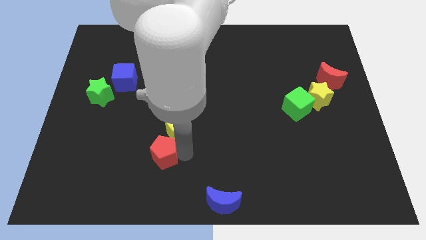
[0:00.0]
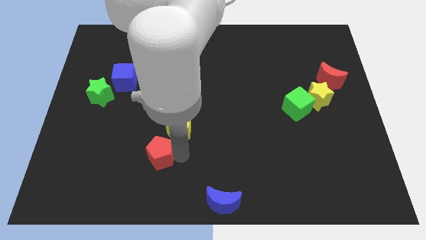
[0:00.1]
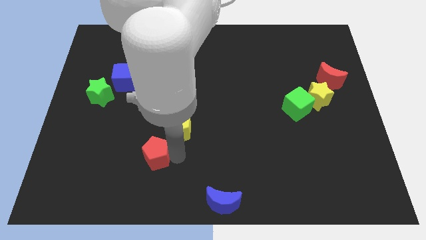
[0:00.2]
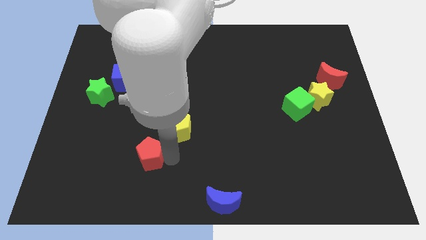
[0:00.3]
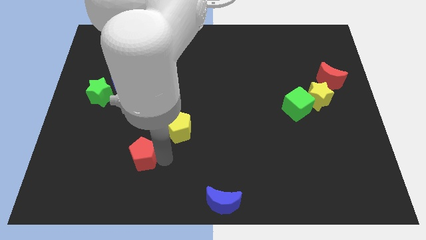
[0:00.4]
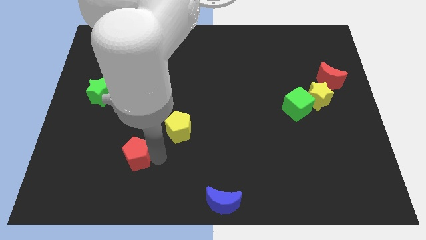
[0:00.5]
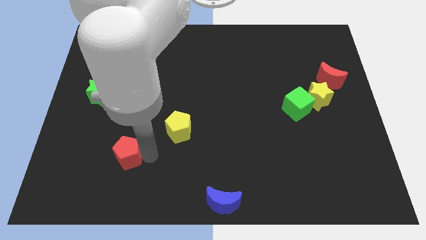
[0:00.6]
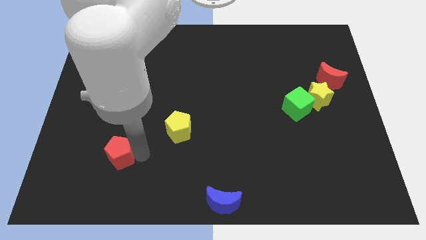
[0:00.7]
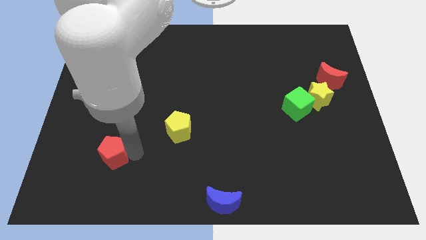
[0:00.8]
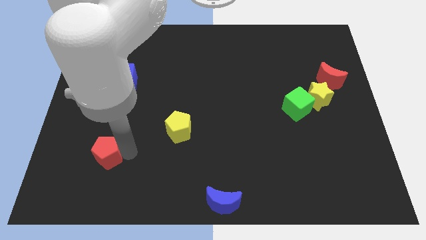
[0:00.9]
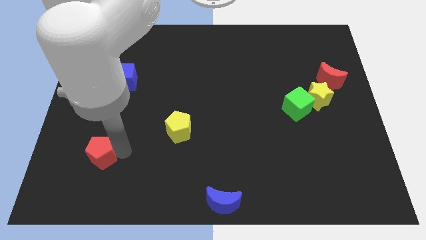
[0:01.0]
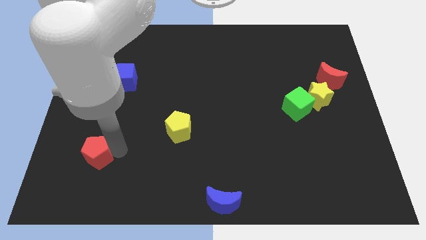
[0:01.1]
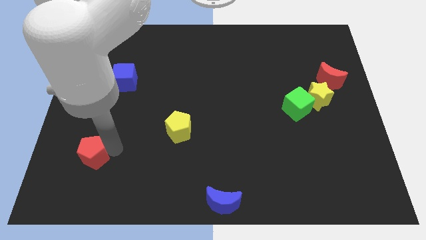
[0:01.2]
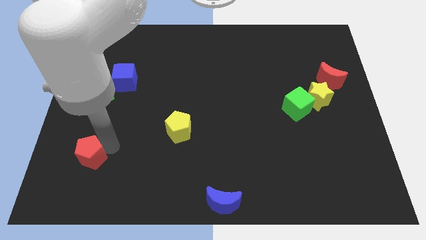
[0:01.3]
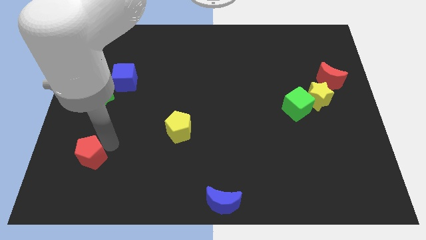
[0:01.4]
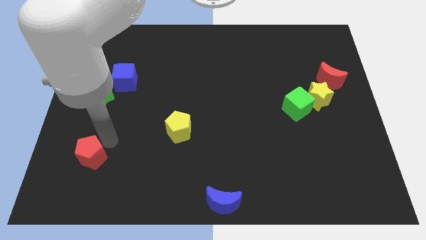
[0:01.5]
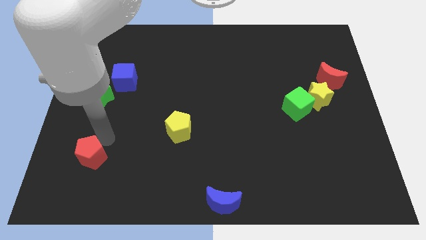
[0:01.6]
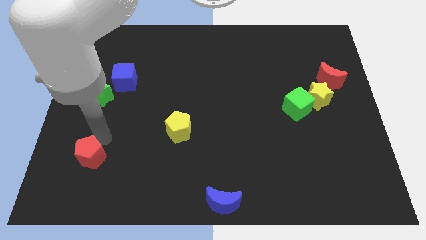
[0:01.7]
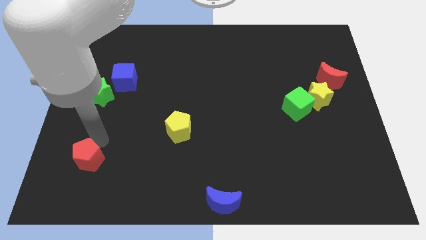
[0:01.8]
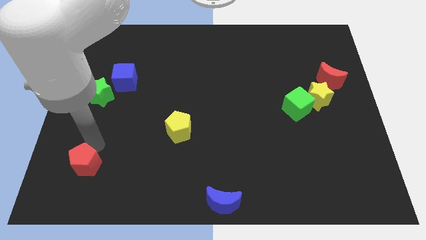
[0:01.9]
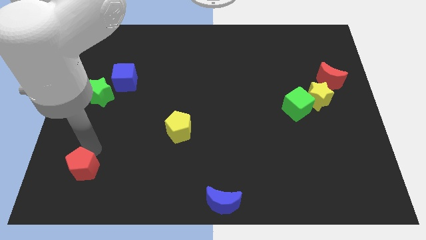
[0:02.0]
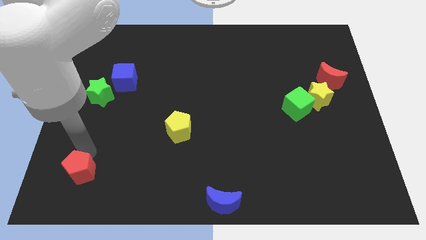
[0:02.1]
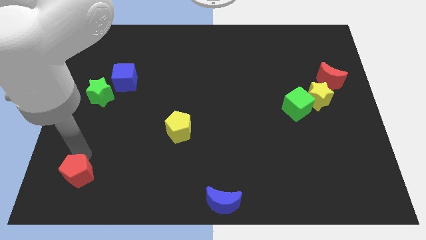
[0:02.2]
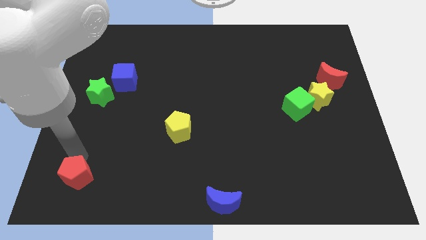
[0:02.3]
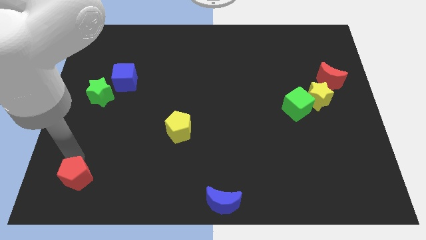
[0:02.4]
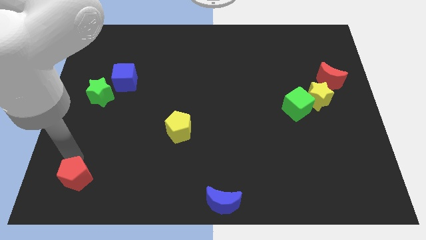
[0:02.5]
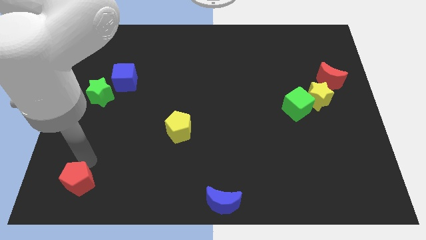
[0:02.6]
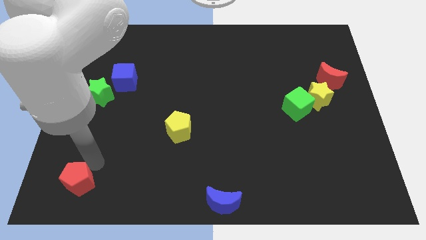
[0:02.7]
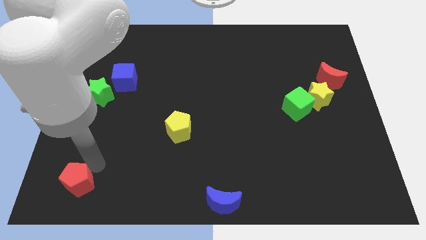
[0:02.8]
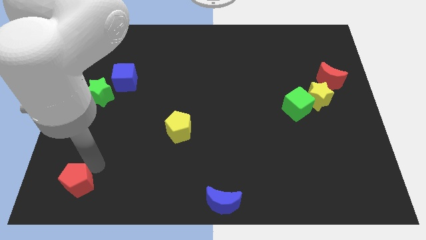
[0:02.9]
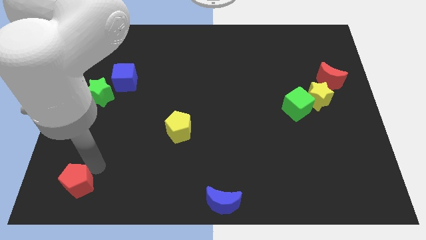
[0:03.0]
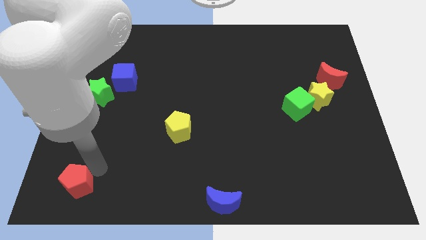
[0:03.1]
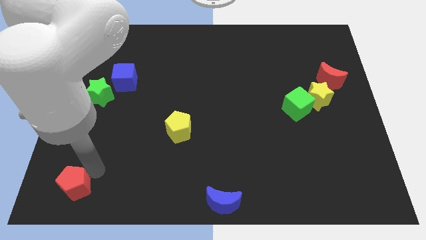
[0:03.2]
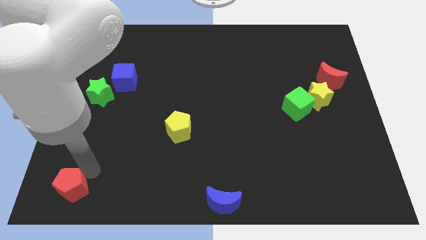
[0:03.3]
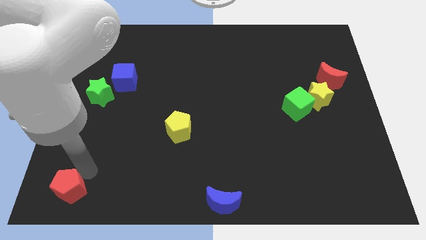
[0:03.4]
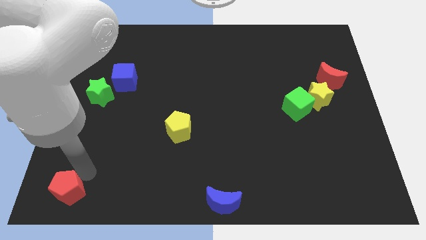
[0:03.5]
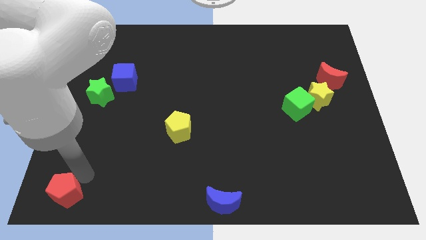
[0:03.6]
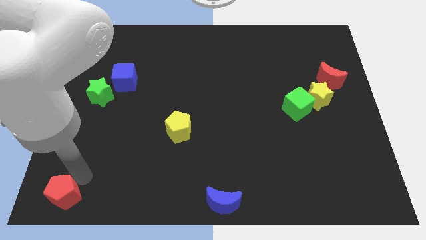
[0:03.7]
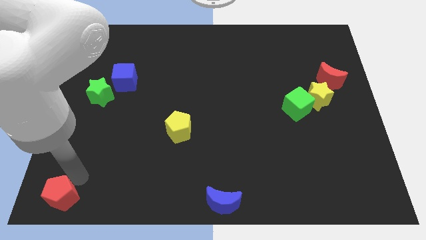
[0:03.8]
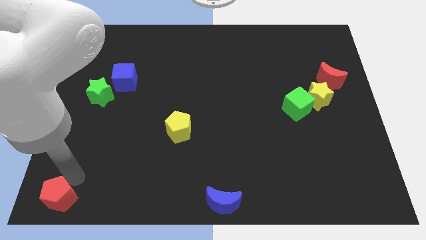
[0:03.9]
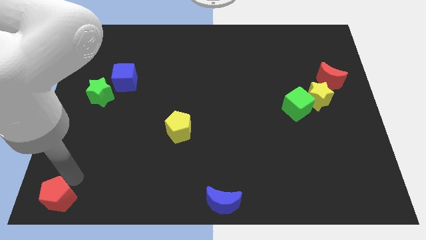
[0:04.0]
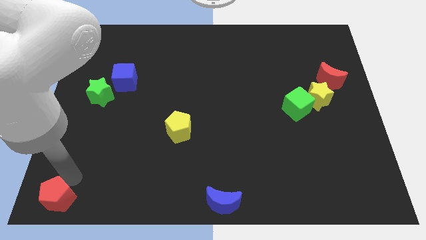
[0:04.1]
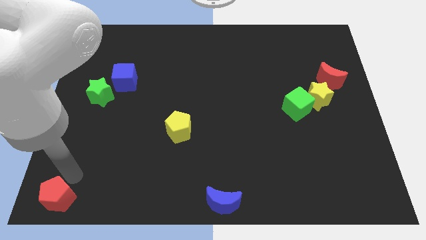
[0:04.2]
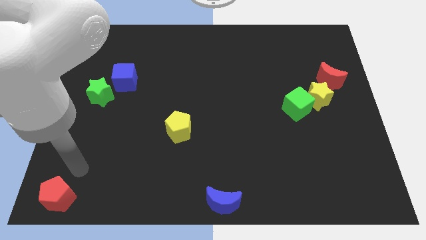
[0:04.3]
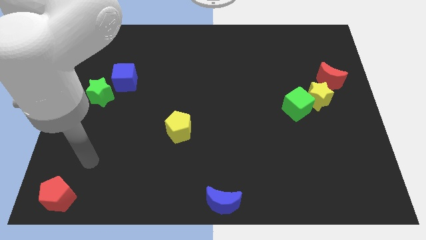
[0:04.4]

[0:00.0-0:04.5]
move red pentagon to the bottom left

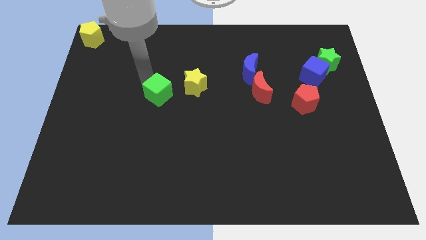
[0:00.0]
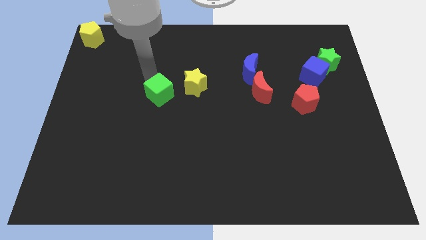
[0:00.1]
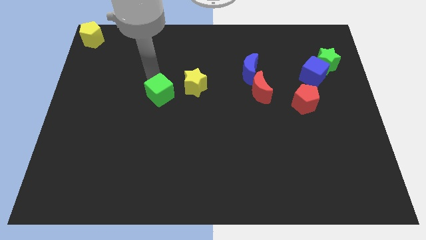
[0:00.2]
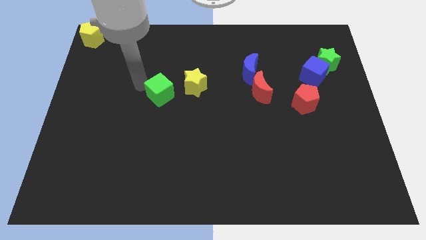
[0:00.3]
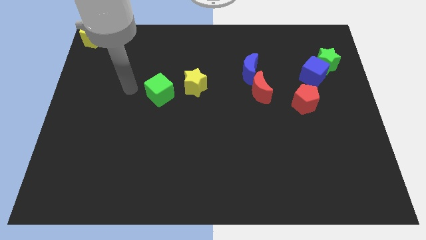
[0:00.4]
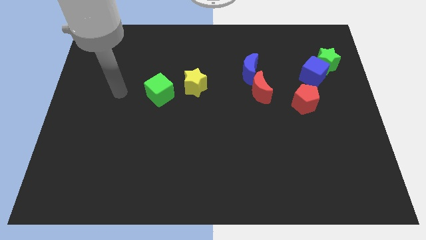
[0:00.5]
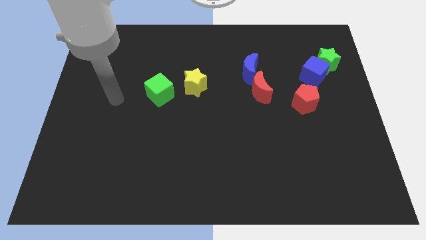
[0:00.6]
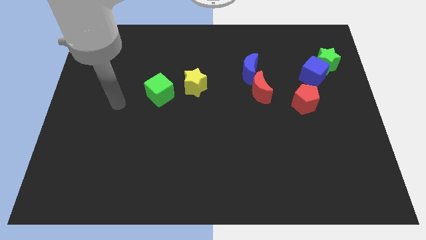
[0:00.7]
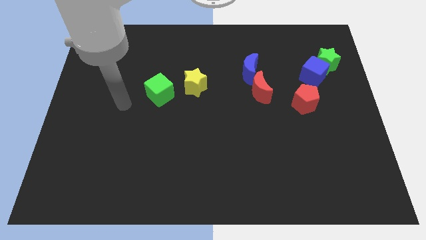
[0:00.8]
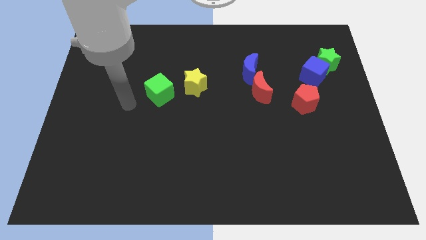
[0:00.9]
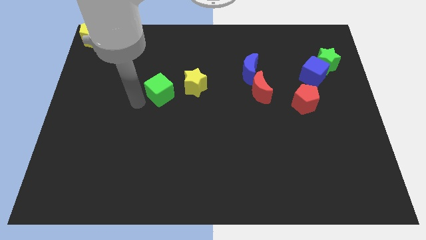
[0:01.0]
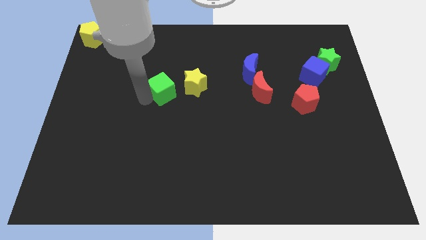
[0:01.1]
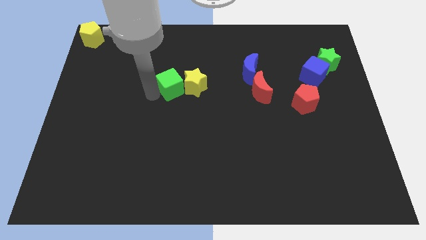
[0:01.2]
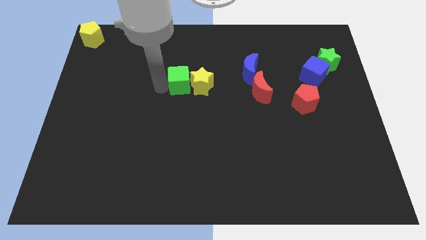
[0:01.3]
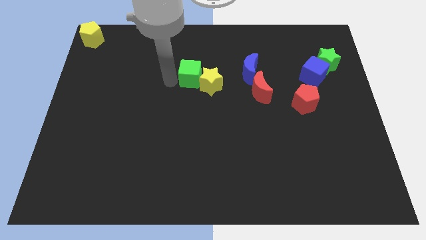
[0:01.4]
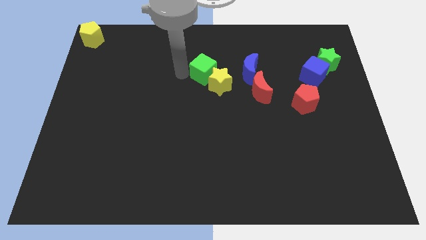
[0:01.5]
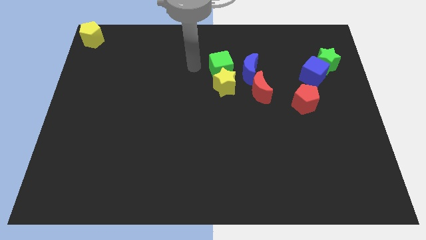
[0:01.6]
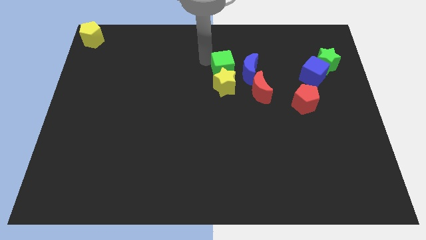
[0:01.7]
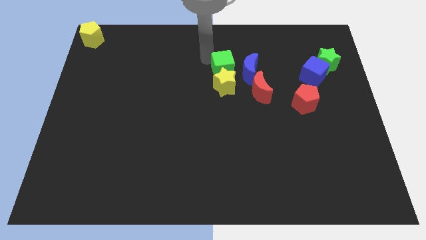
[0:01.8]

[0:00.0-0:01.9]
push the green cube into the yellow star

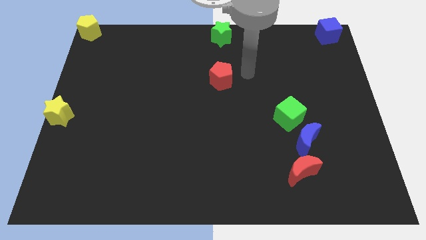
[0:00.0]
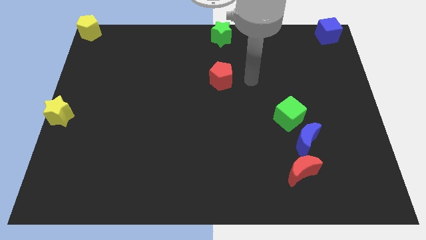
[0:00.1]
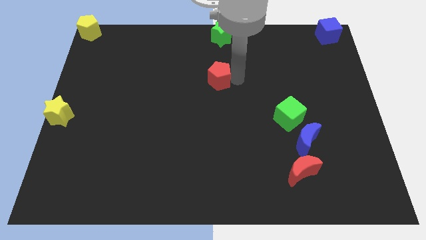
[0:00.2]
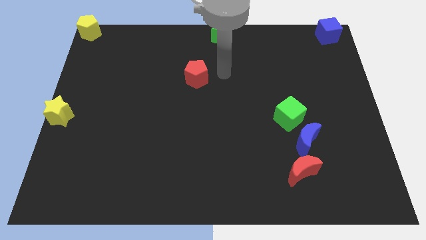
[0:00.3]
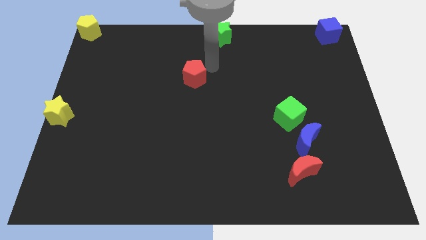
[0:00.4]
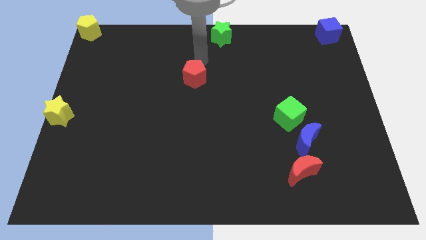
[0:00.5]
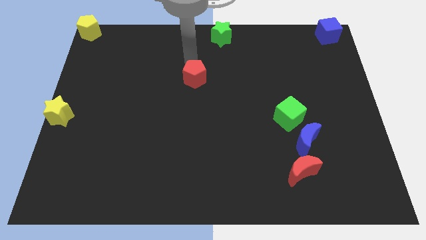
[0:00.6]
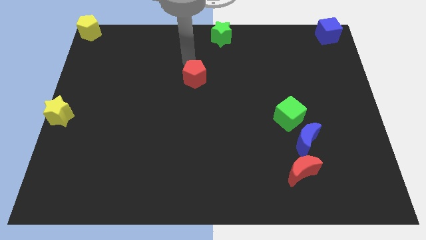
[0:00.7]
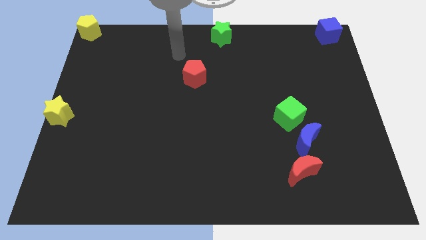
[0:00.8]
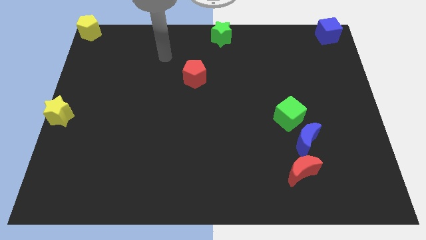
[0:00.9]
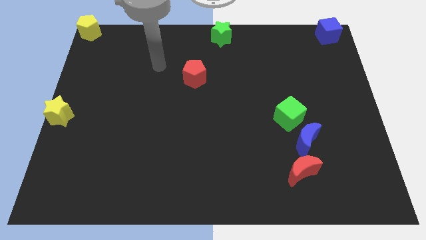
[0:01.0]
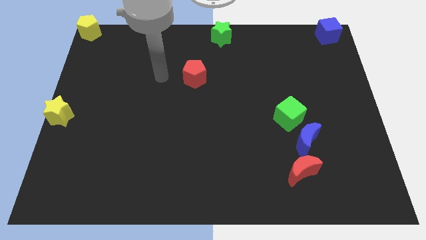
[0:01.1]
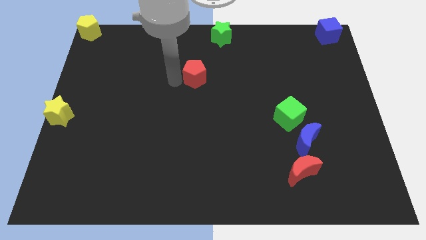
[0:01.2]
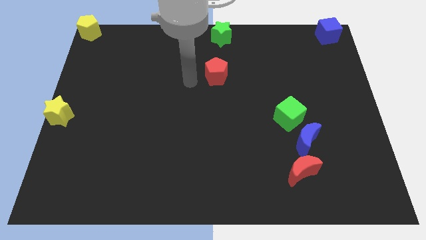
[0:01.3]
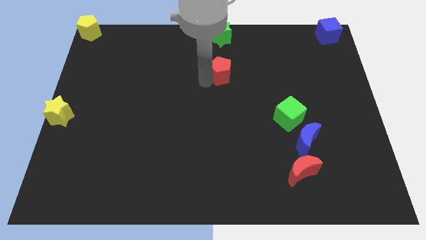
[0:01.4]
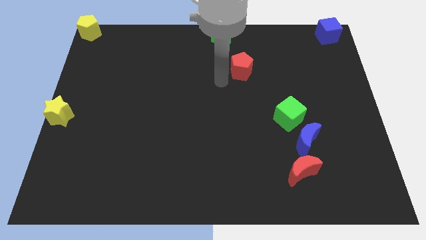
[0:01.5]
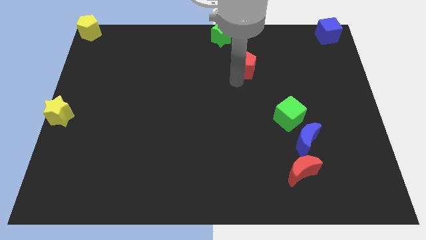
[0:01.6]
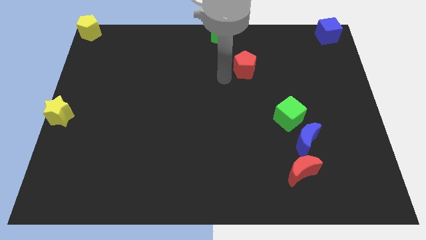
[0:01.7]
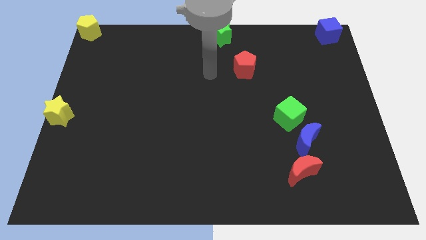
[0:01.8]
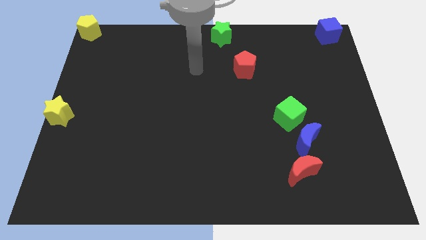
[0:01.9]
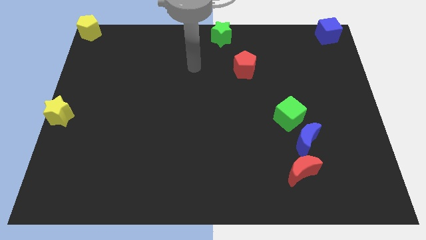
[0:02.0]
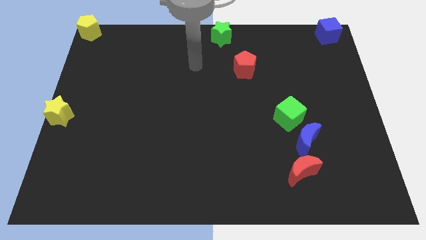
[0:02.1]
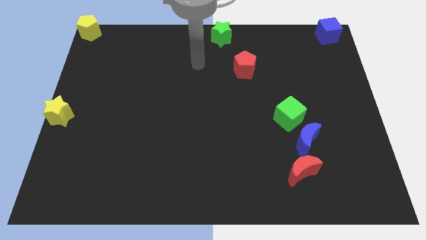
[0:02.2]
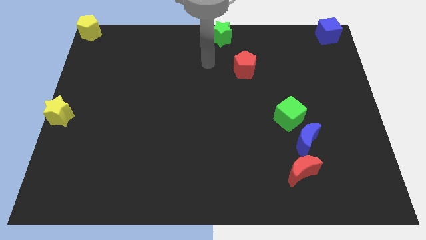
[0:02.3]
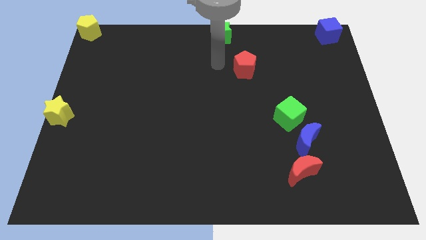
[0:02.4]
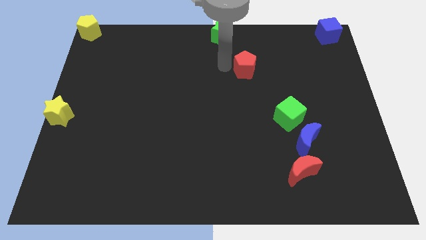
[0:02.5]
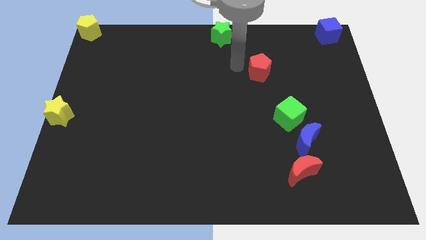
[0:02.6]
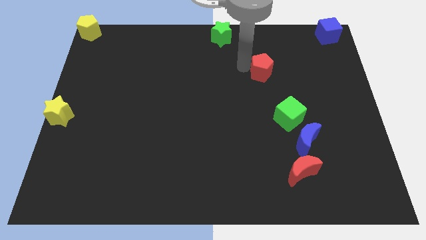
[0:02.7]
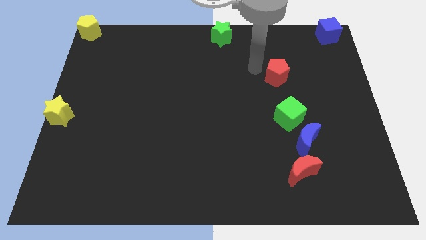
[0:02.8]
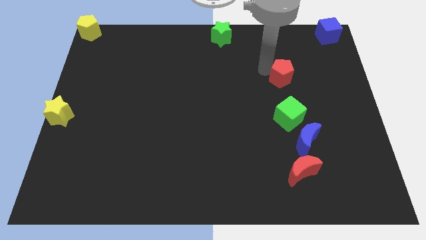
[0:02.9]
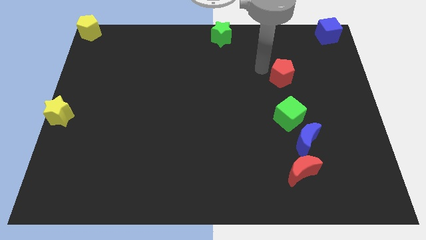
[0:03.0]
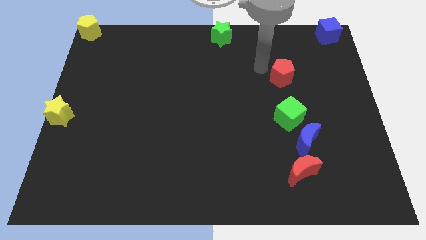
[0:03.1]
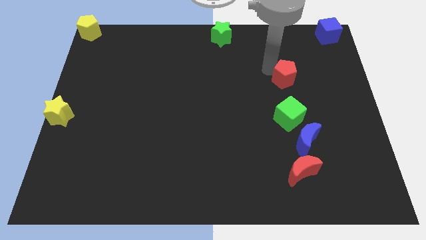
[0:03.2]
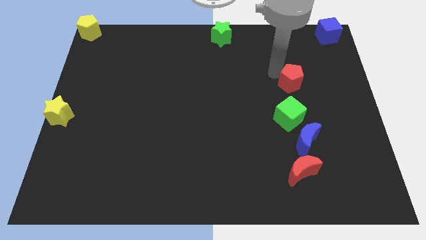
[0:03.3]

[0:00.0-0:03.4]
drag the red pentagon above the green cube
